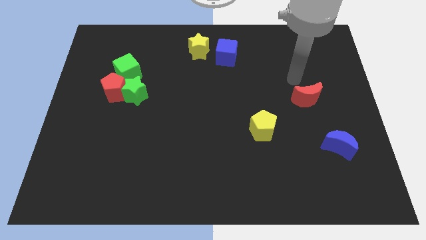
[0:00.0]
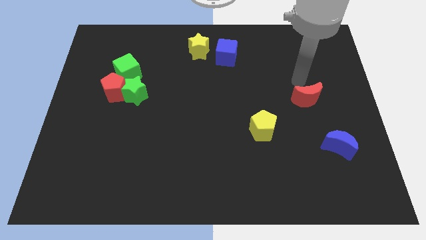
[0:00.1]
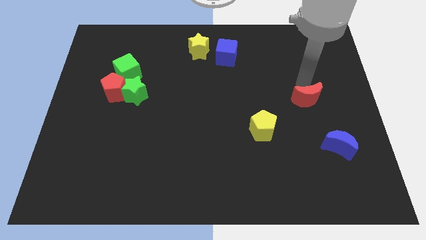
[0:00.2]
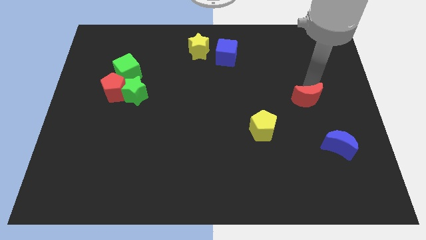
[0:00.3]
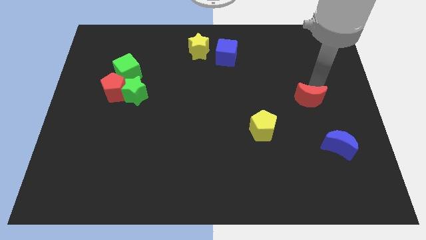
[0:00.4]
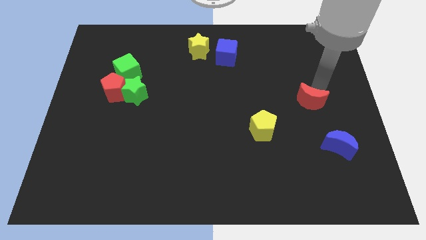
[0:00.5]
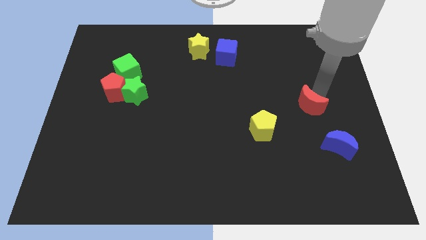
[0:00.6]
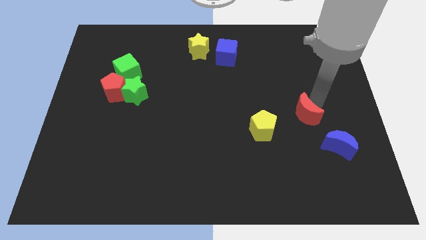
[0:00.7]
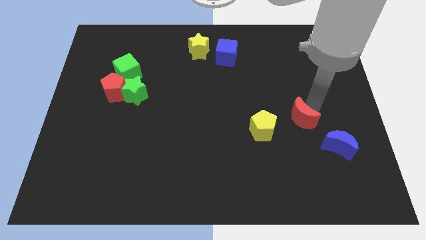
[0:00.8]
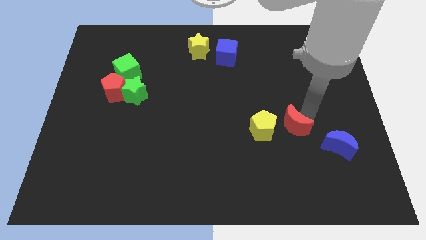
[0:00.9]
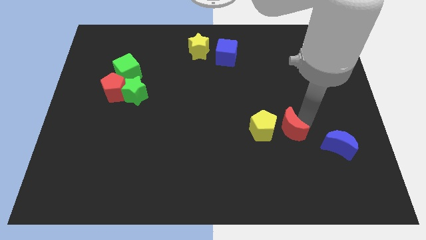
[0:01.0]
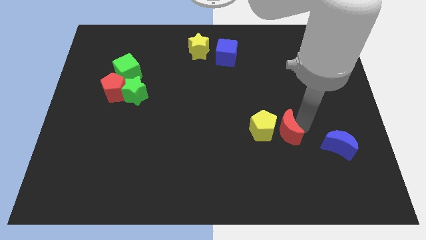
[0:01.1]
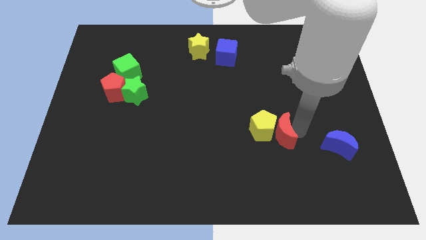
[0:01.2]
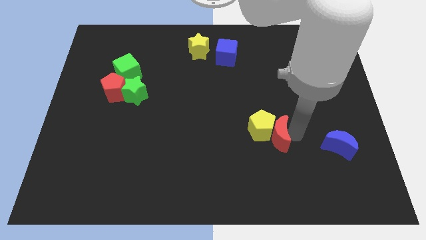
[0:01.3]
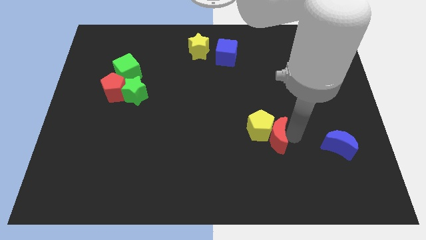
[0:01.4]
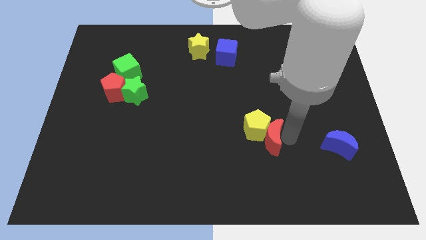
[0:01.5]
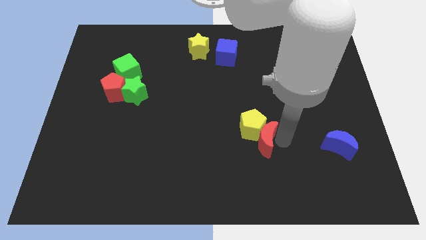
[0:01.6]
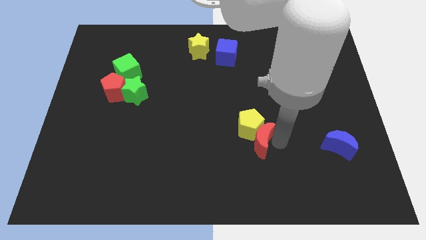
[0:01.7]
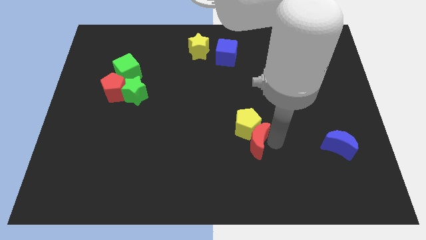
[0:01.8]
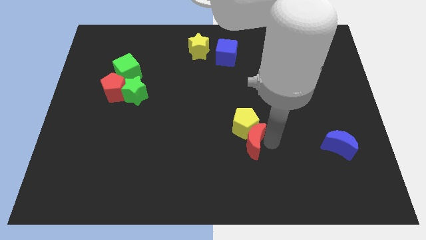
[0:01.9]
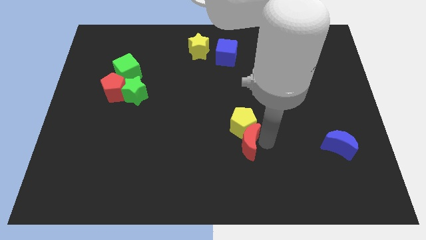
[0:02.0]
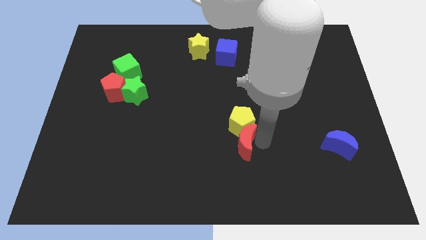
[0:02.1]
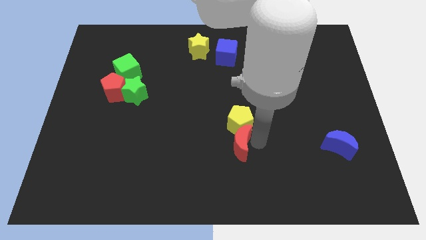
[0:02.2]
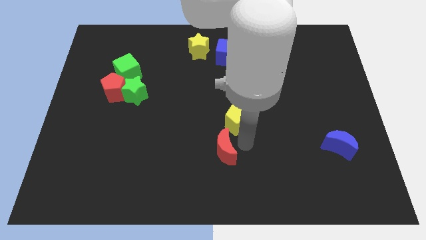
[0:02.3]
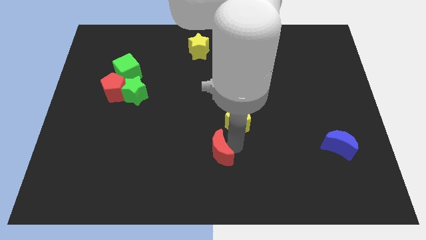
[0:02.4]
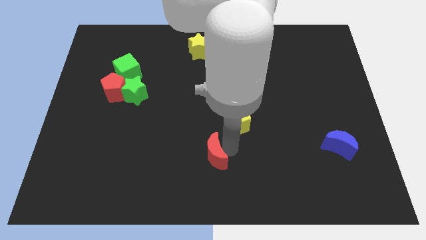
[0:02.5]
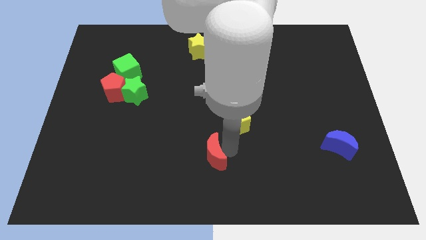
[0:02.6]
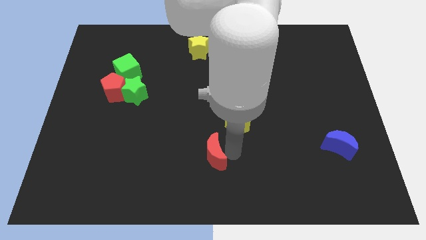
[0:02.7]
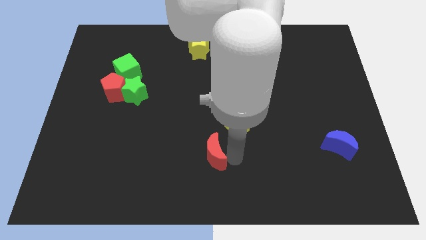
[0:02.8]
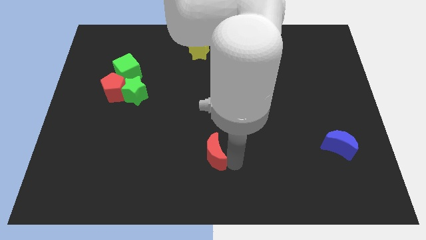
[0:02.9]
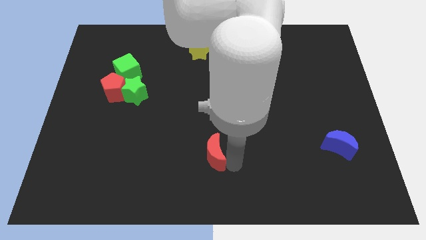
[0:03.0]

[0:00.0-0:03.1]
place the red moon below the yellow pentagon

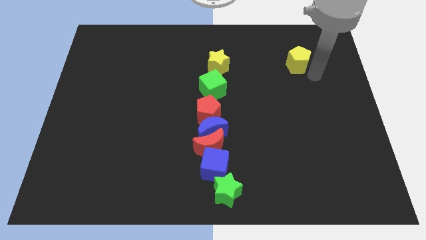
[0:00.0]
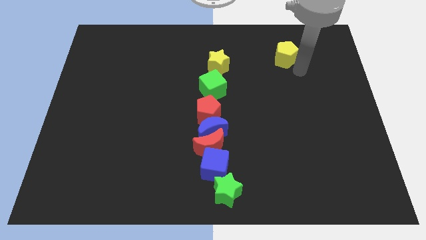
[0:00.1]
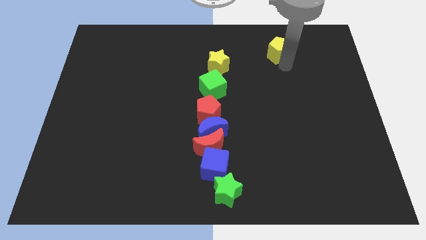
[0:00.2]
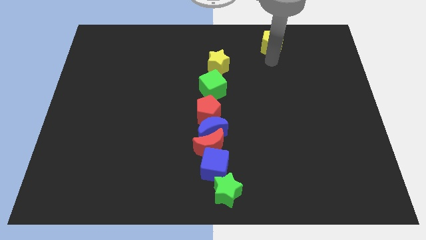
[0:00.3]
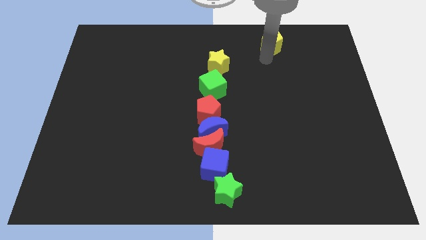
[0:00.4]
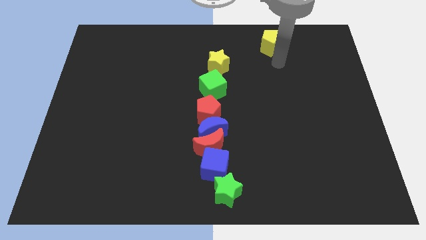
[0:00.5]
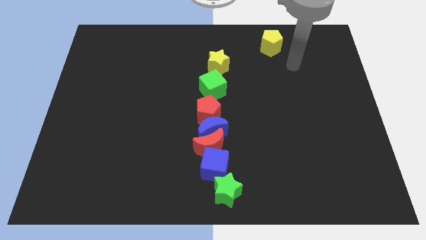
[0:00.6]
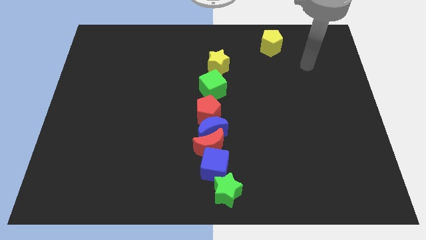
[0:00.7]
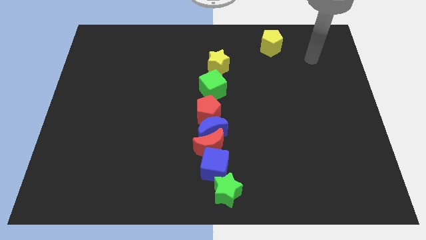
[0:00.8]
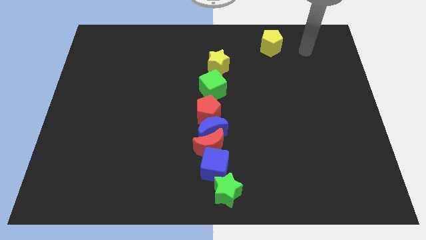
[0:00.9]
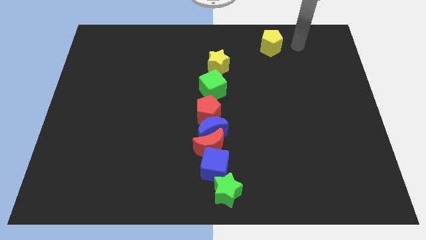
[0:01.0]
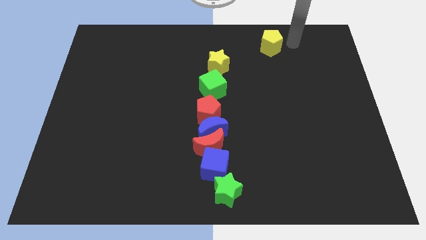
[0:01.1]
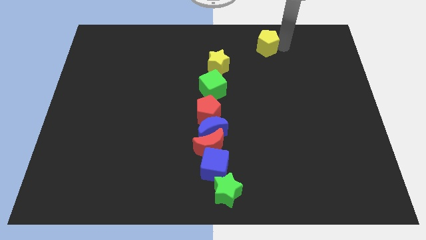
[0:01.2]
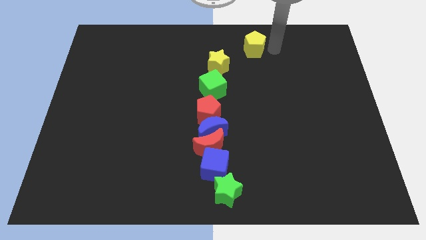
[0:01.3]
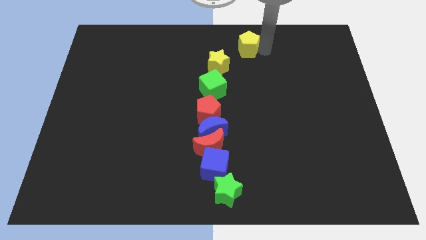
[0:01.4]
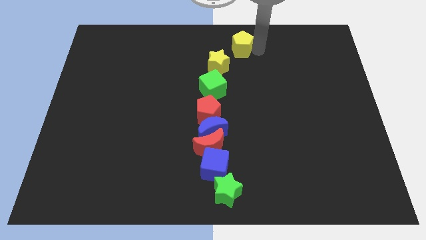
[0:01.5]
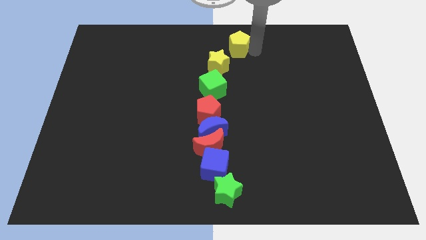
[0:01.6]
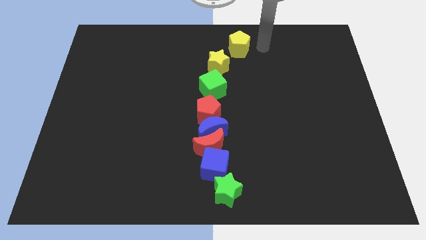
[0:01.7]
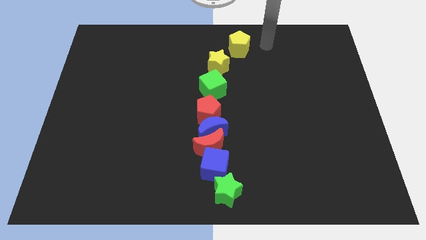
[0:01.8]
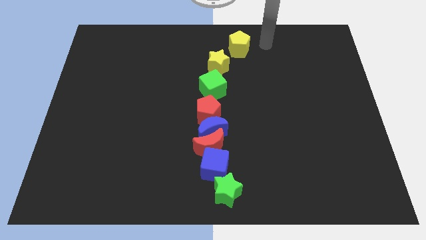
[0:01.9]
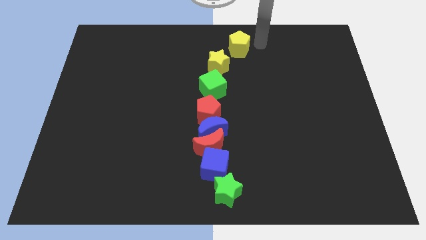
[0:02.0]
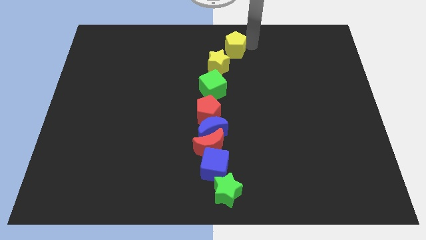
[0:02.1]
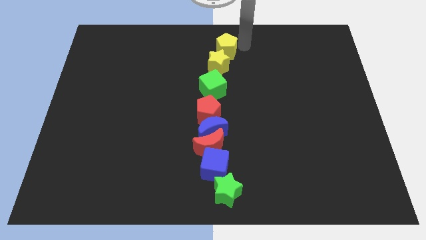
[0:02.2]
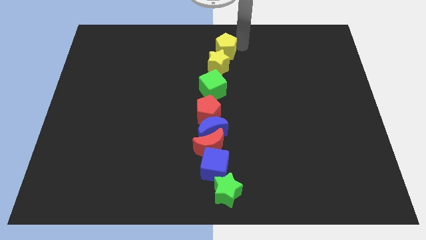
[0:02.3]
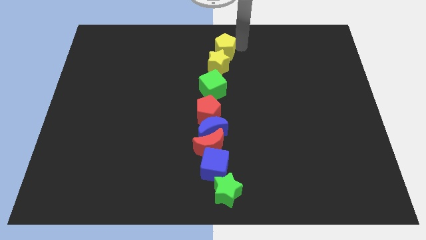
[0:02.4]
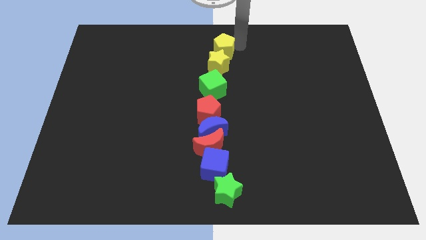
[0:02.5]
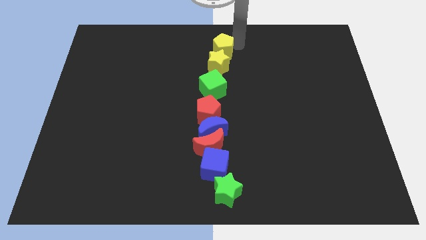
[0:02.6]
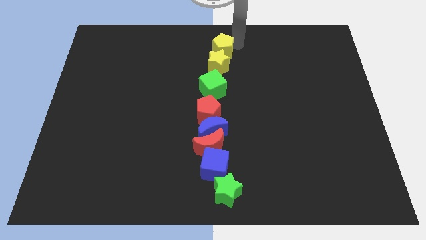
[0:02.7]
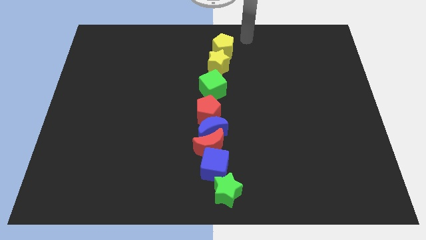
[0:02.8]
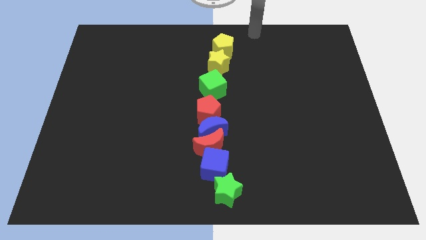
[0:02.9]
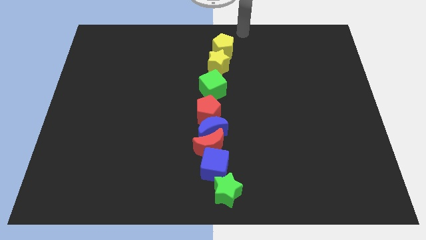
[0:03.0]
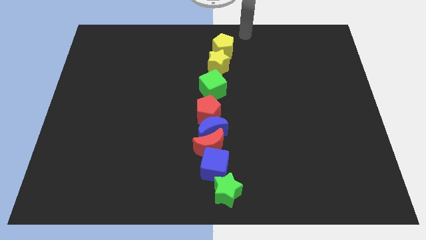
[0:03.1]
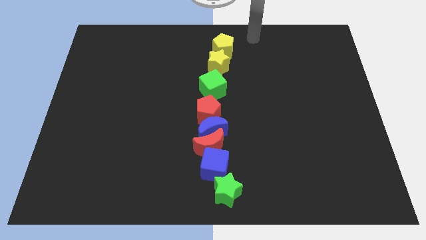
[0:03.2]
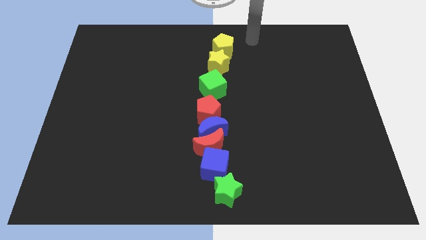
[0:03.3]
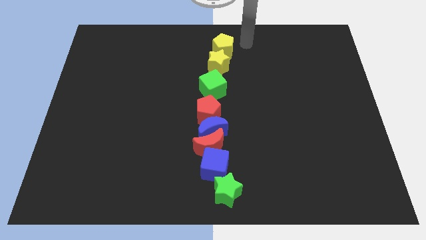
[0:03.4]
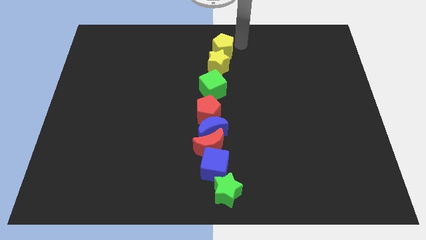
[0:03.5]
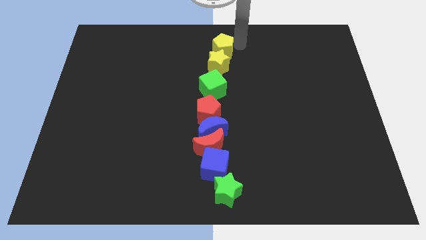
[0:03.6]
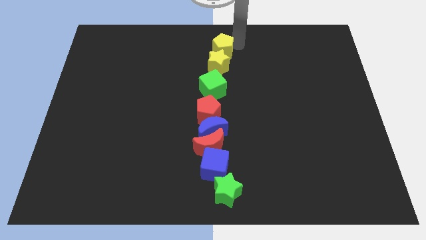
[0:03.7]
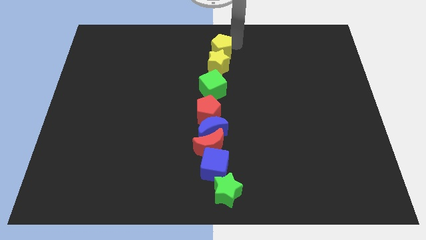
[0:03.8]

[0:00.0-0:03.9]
move the yellow pentagon to the top of the yellow star

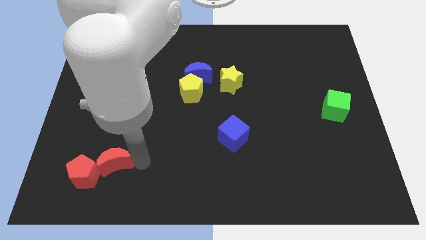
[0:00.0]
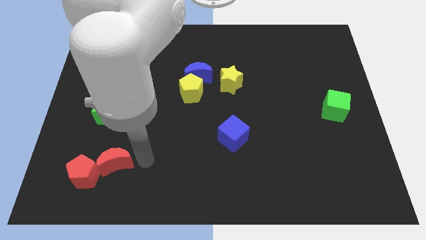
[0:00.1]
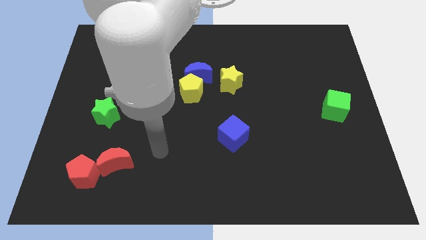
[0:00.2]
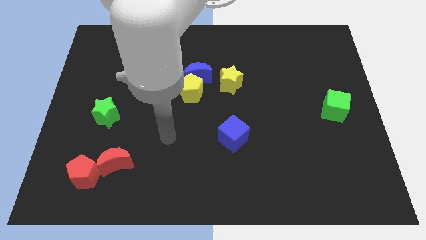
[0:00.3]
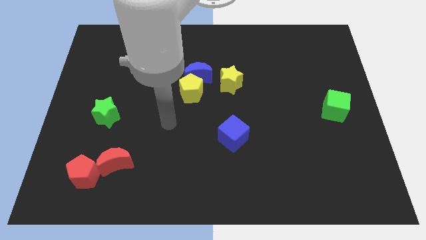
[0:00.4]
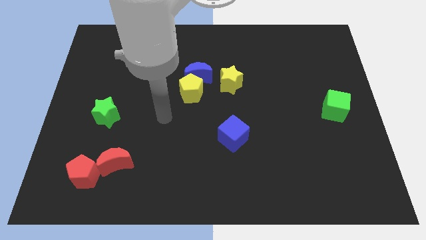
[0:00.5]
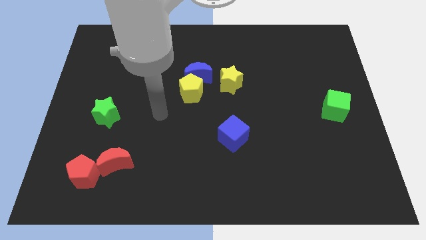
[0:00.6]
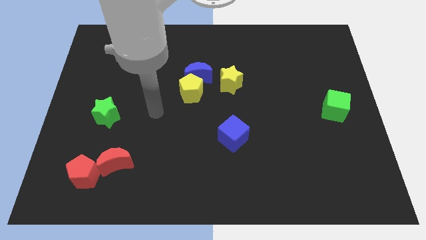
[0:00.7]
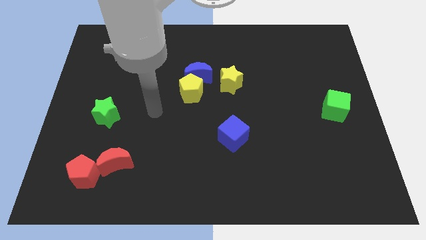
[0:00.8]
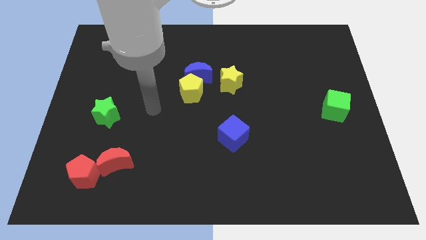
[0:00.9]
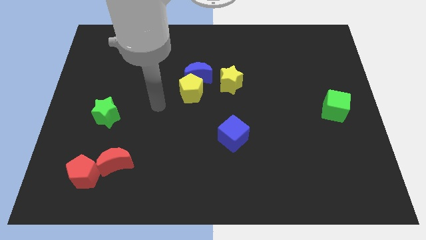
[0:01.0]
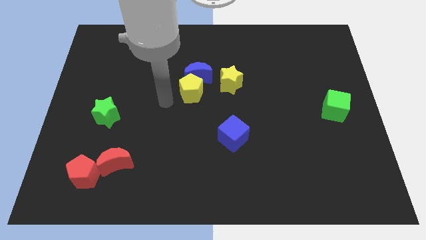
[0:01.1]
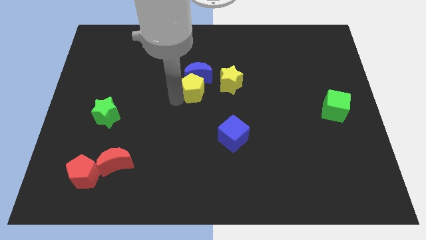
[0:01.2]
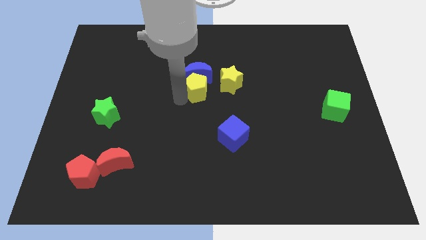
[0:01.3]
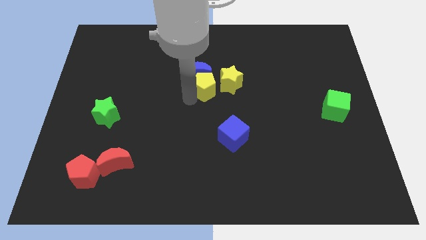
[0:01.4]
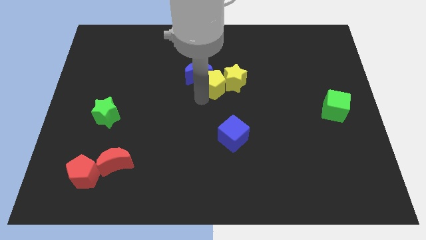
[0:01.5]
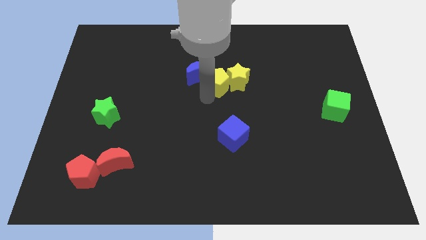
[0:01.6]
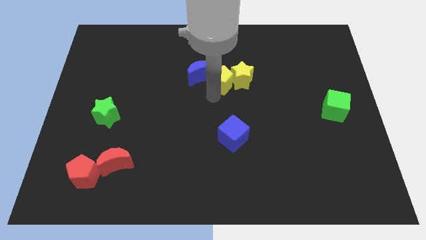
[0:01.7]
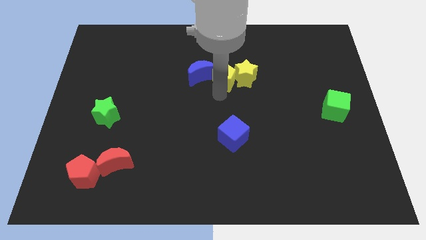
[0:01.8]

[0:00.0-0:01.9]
push the yellow pentagon into yellow star to the left
